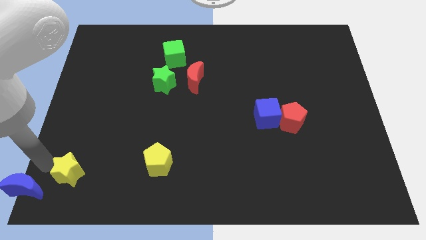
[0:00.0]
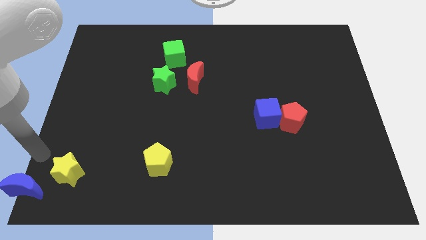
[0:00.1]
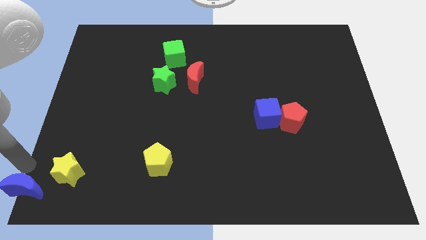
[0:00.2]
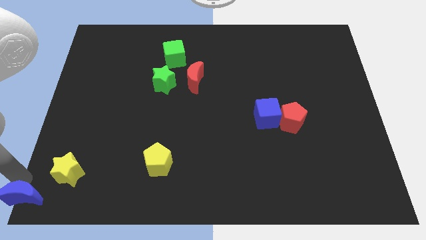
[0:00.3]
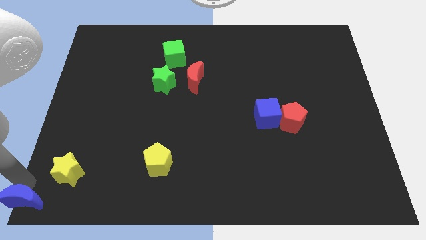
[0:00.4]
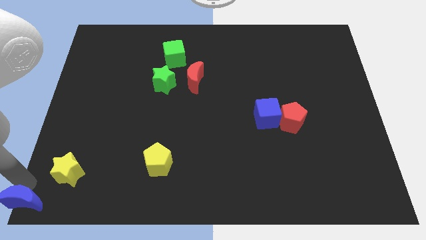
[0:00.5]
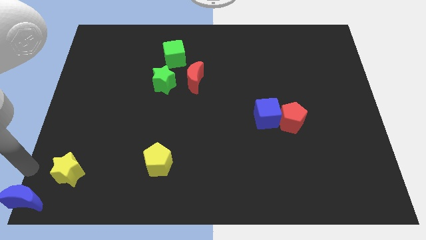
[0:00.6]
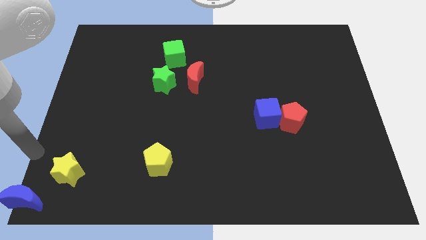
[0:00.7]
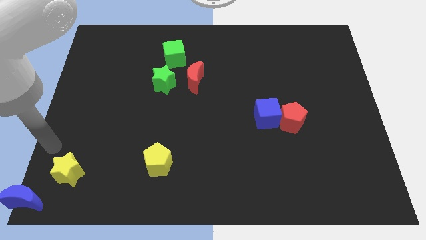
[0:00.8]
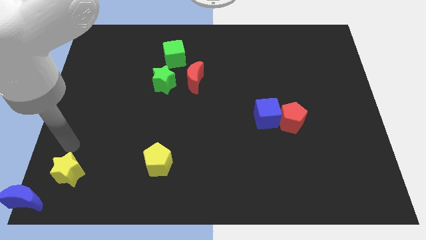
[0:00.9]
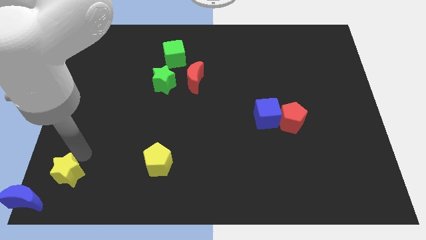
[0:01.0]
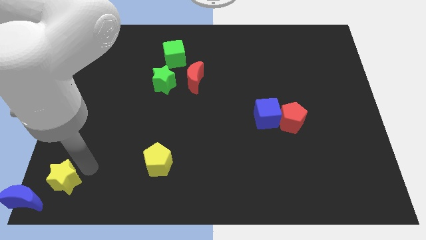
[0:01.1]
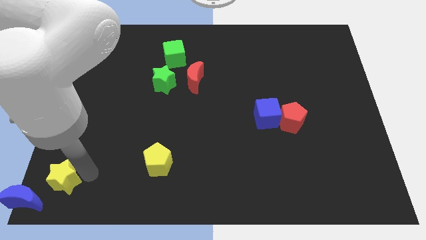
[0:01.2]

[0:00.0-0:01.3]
move blue moon to the bottom left corner

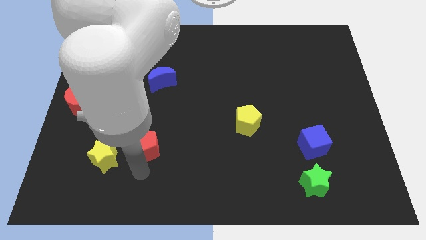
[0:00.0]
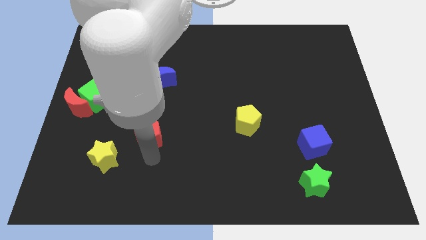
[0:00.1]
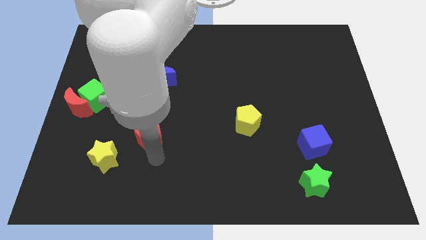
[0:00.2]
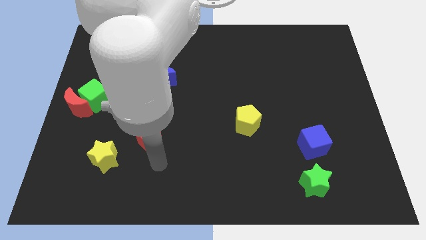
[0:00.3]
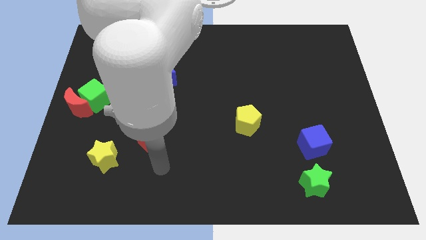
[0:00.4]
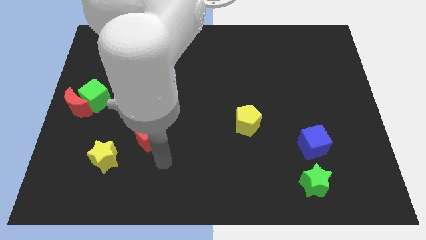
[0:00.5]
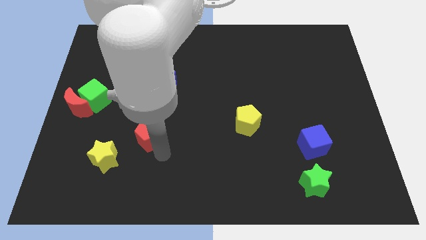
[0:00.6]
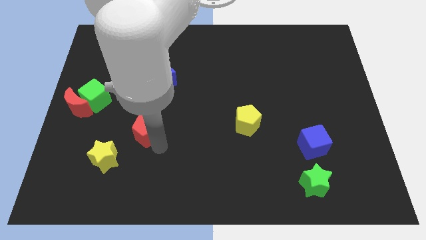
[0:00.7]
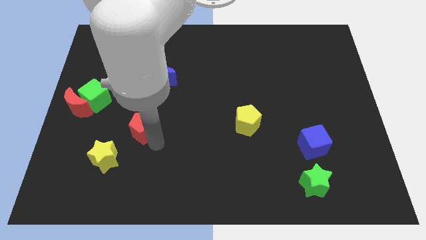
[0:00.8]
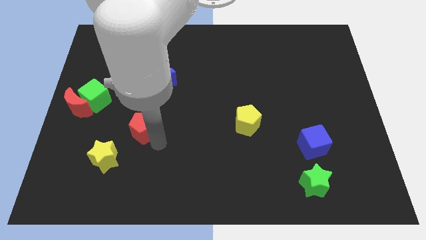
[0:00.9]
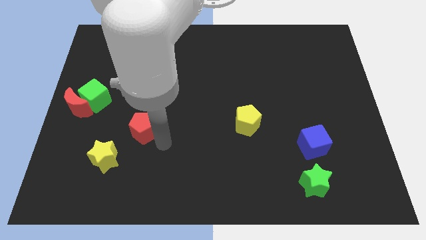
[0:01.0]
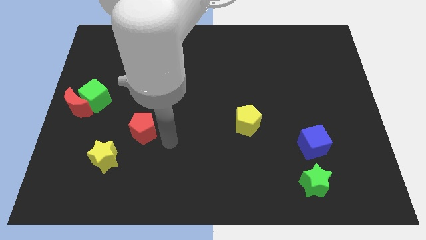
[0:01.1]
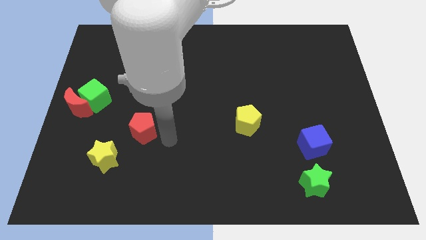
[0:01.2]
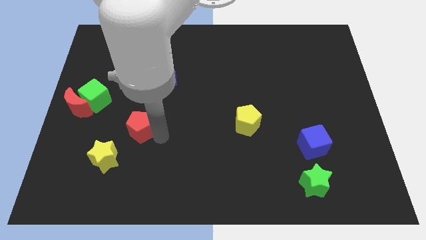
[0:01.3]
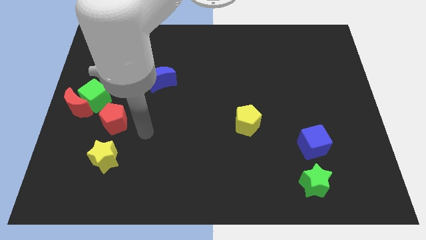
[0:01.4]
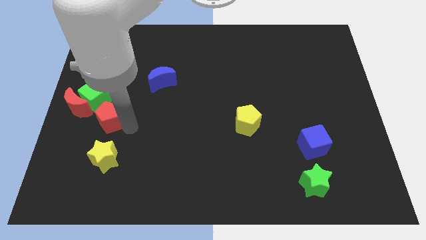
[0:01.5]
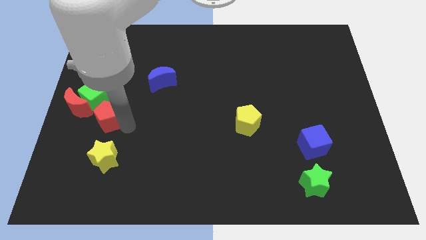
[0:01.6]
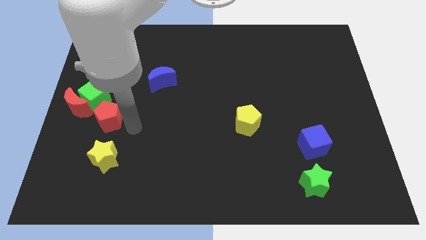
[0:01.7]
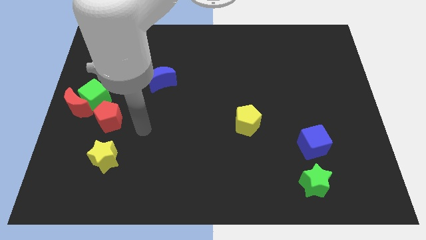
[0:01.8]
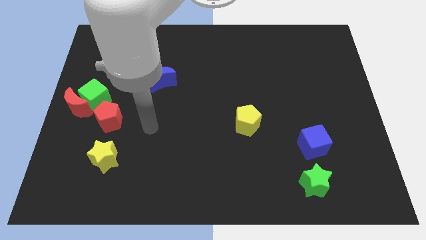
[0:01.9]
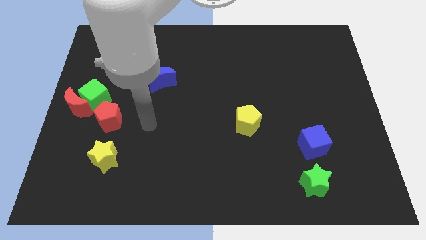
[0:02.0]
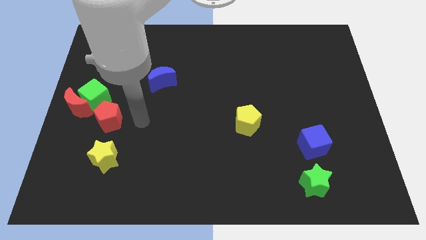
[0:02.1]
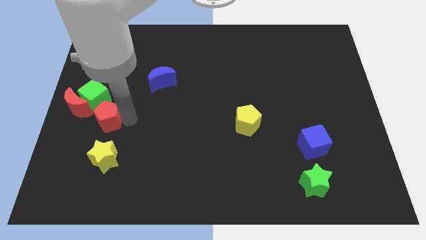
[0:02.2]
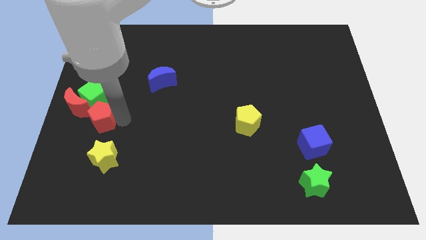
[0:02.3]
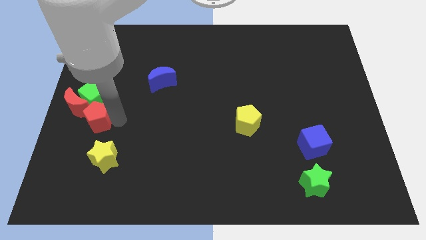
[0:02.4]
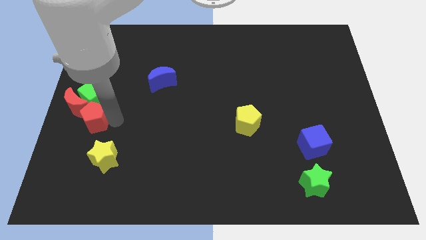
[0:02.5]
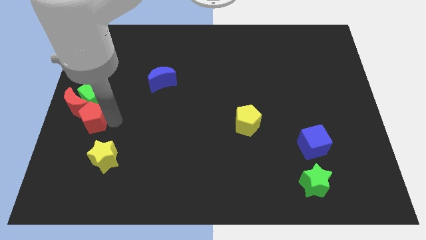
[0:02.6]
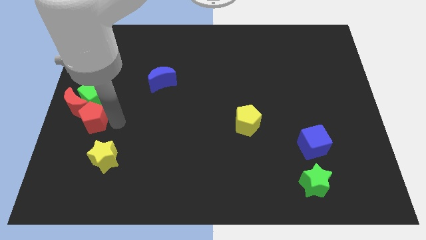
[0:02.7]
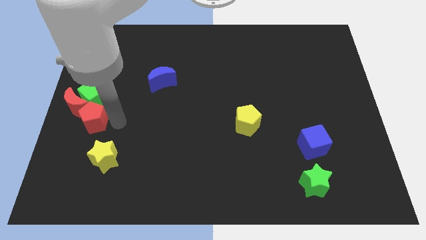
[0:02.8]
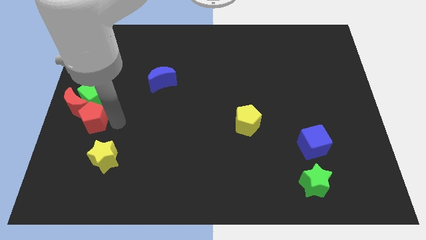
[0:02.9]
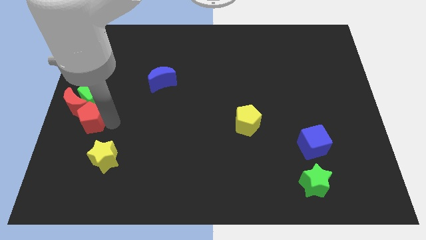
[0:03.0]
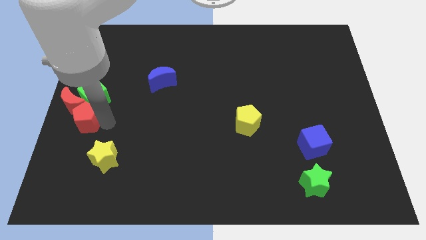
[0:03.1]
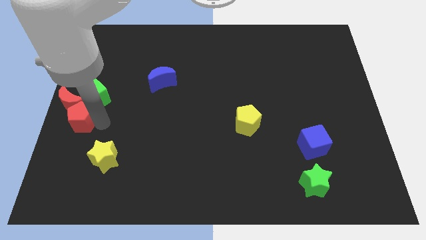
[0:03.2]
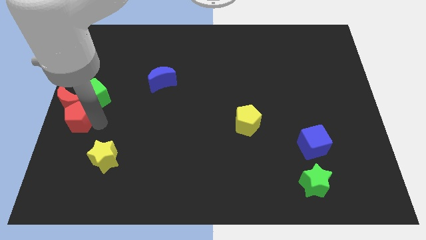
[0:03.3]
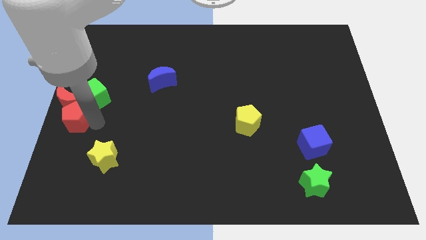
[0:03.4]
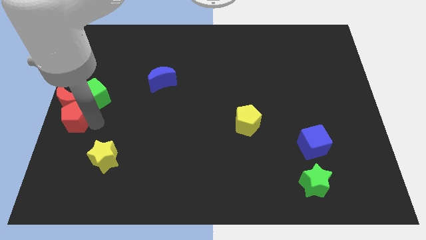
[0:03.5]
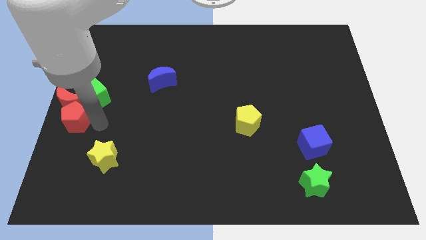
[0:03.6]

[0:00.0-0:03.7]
move the red pentagon into the green and red blocks

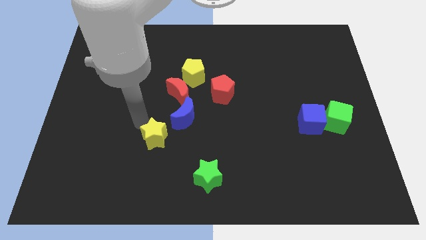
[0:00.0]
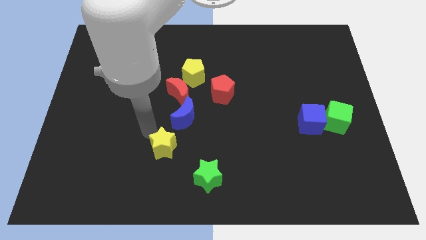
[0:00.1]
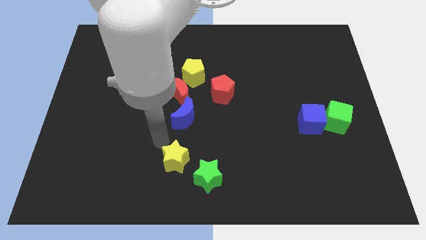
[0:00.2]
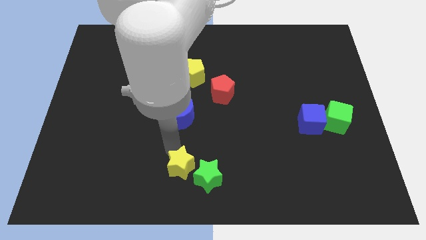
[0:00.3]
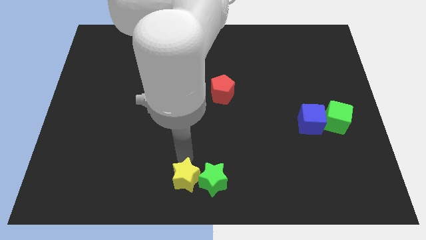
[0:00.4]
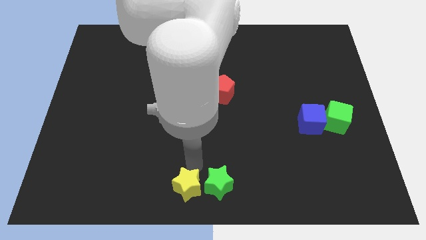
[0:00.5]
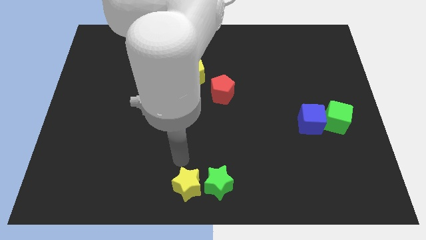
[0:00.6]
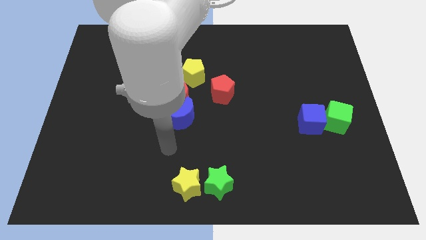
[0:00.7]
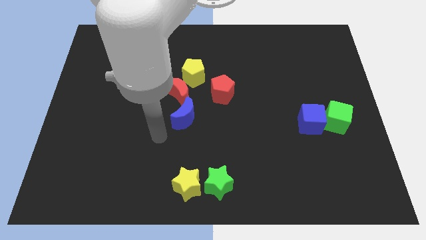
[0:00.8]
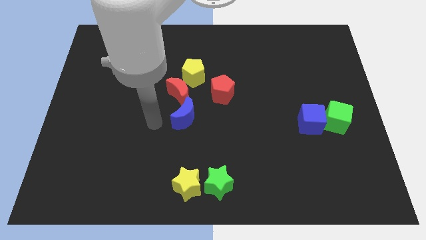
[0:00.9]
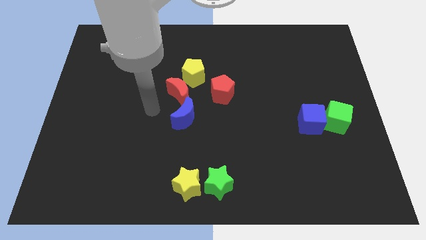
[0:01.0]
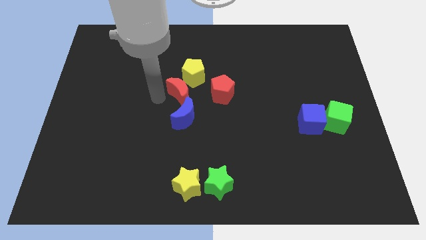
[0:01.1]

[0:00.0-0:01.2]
place the yellow star to the left of the green star

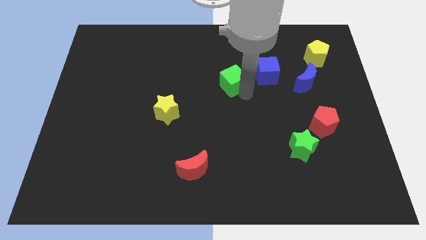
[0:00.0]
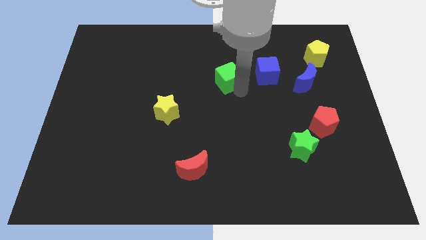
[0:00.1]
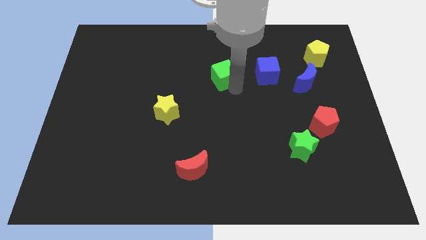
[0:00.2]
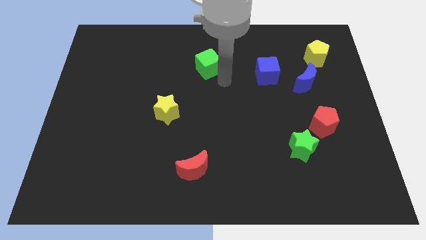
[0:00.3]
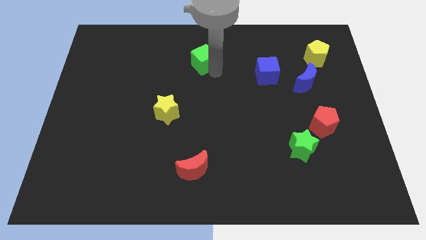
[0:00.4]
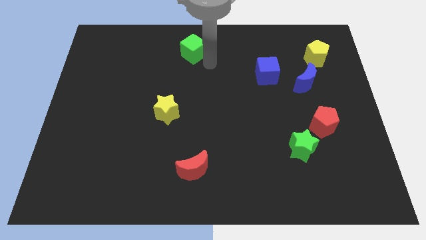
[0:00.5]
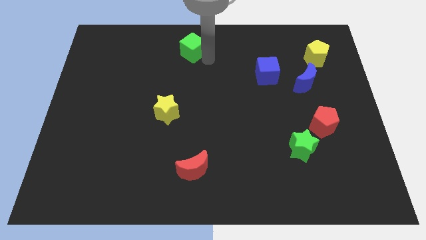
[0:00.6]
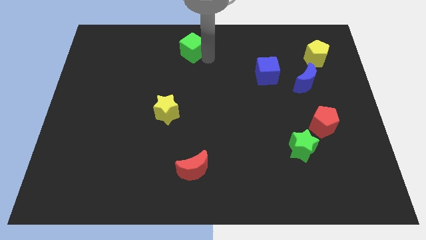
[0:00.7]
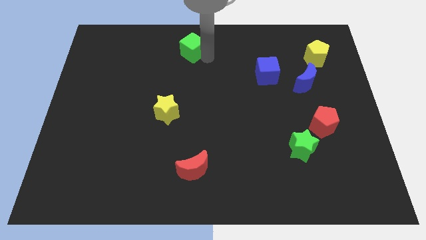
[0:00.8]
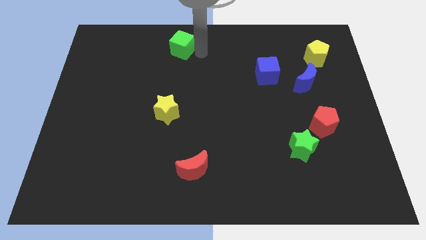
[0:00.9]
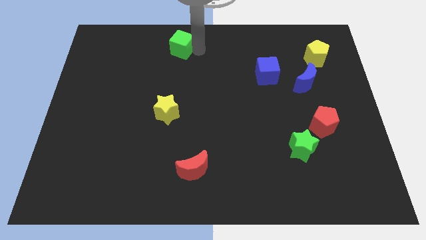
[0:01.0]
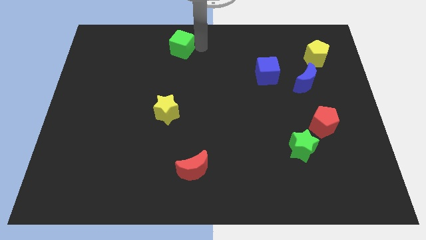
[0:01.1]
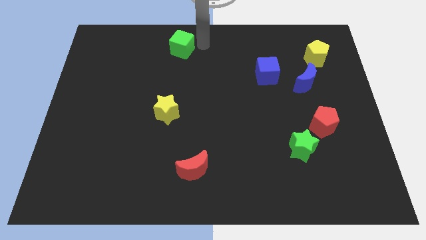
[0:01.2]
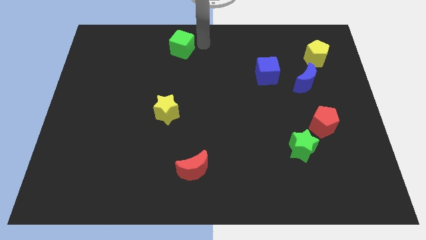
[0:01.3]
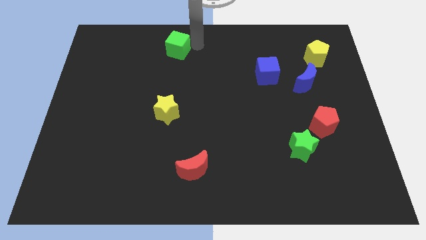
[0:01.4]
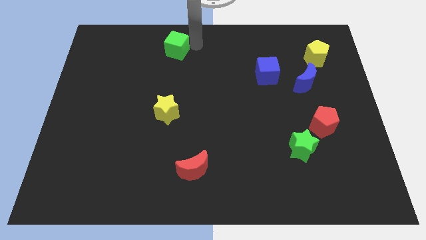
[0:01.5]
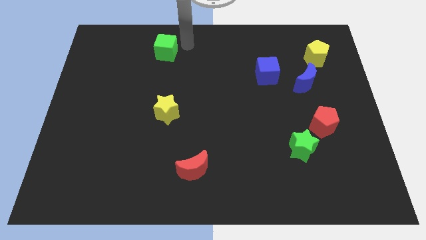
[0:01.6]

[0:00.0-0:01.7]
move the green cube towards the top left of the board

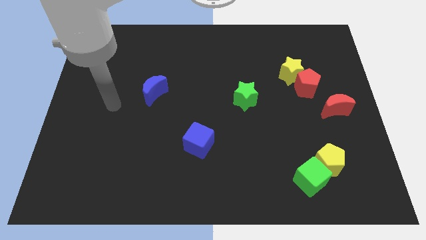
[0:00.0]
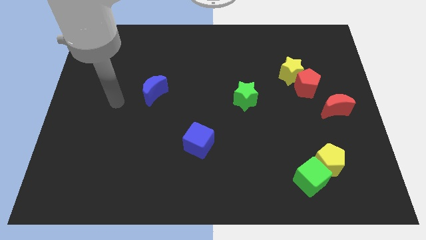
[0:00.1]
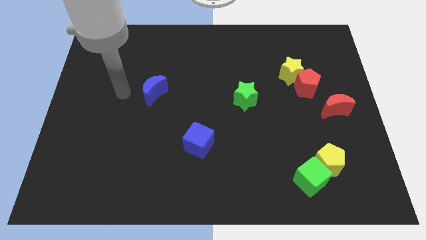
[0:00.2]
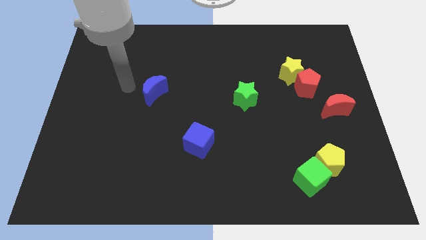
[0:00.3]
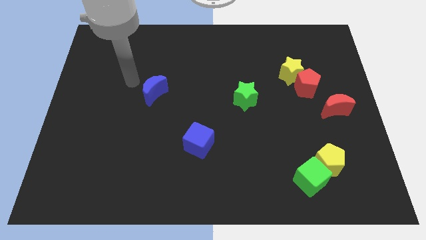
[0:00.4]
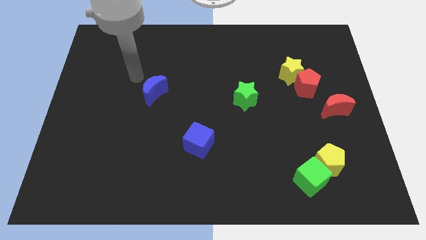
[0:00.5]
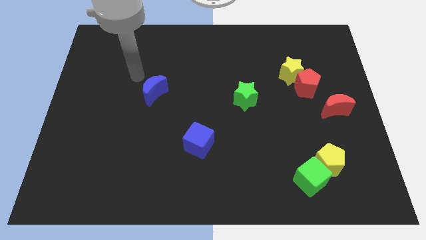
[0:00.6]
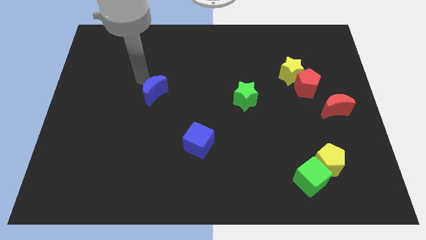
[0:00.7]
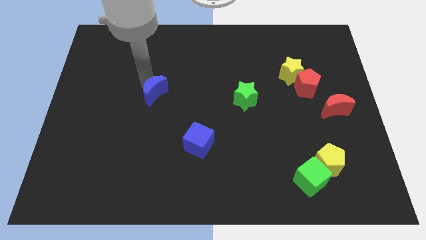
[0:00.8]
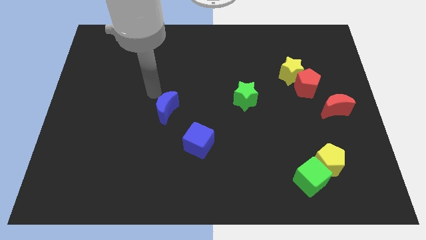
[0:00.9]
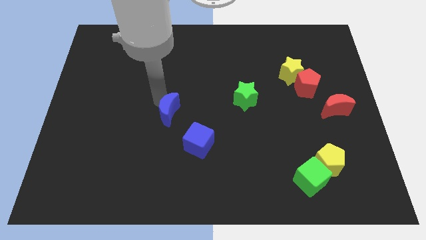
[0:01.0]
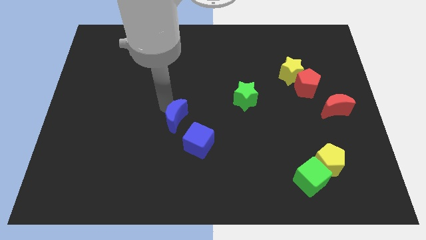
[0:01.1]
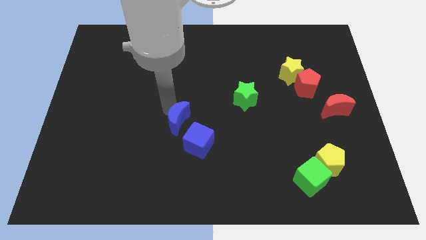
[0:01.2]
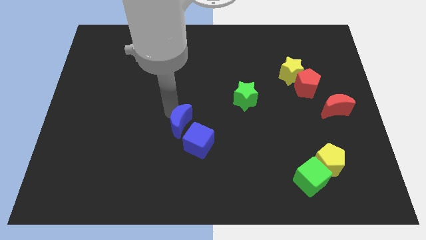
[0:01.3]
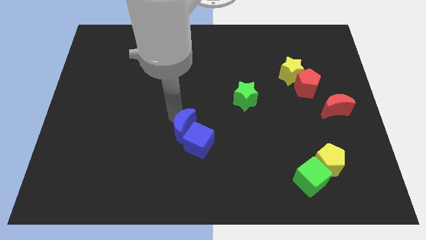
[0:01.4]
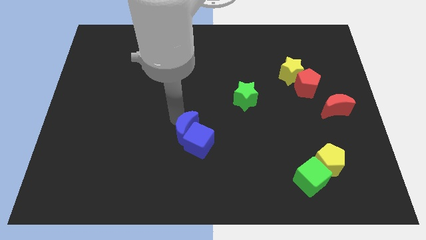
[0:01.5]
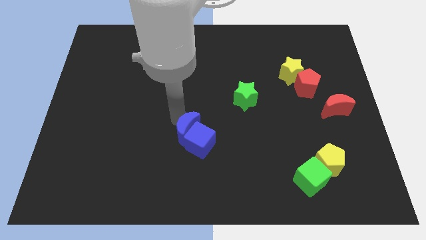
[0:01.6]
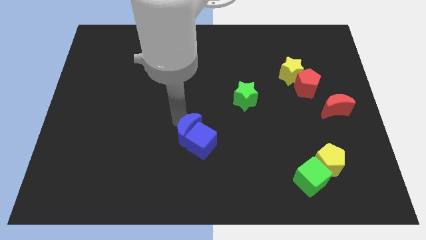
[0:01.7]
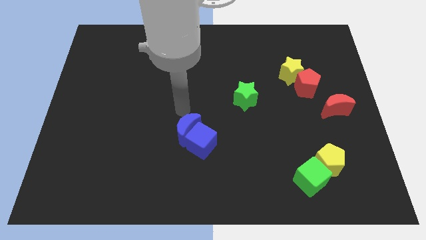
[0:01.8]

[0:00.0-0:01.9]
move the blue moon close to the blue cube
